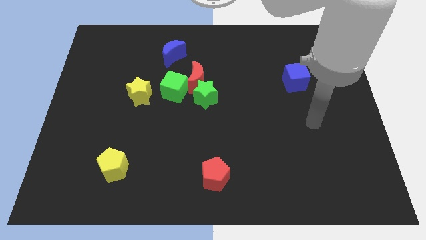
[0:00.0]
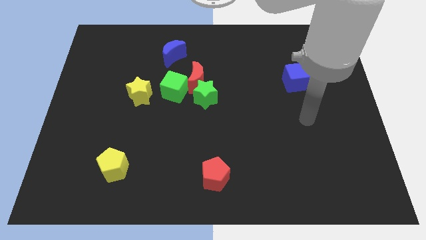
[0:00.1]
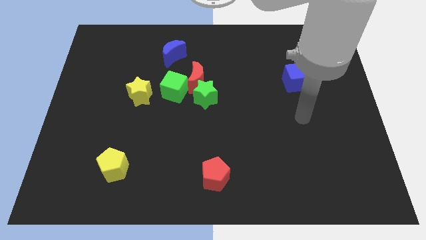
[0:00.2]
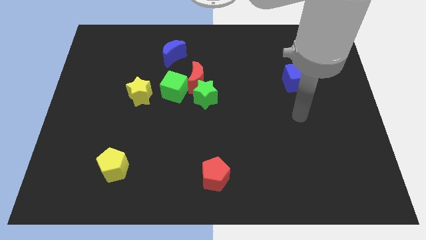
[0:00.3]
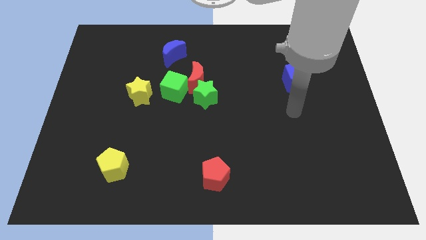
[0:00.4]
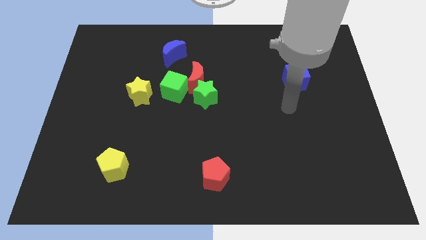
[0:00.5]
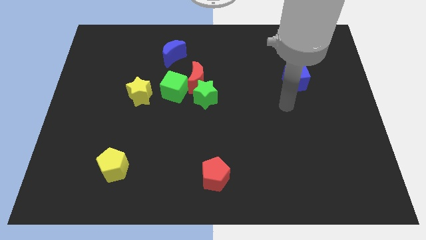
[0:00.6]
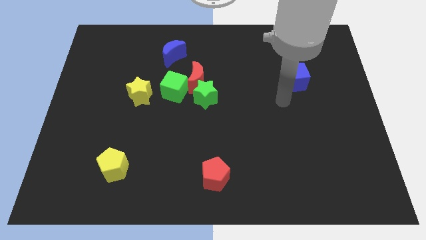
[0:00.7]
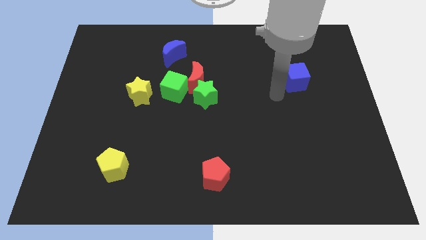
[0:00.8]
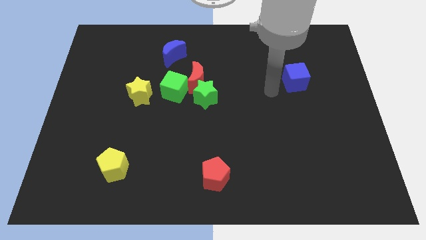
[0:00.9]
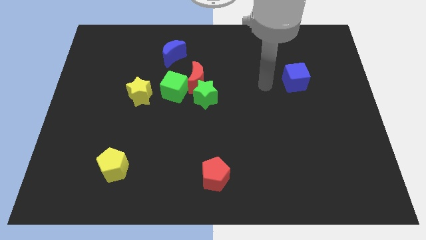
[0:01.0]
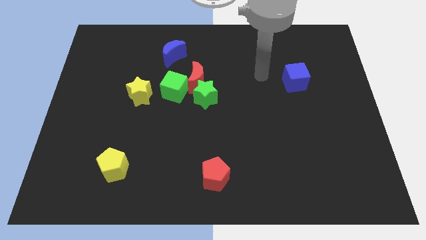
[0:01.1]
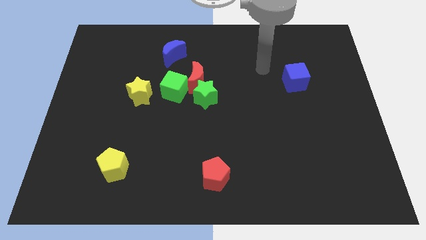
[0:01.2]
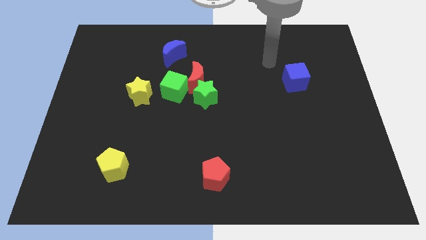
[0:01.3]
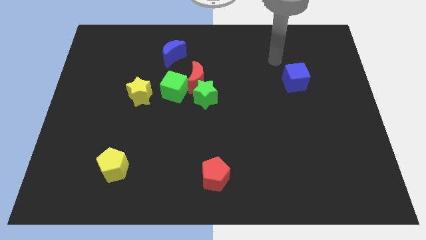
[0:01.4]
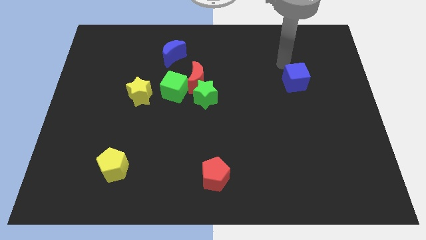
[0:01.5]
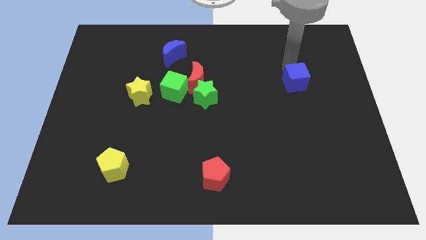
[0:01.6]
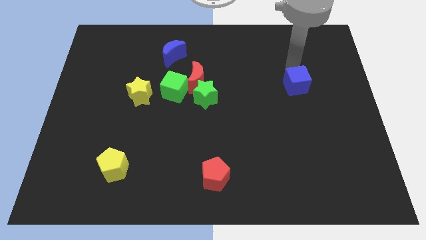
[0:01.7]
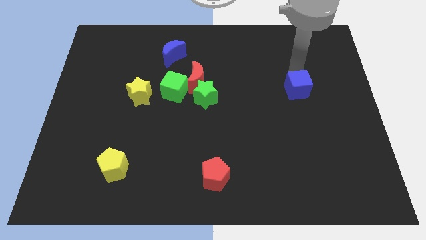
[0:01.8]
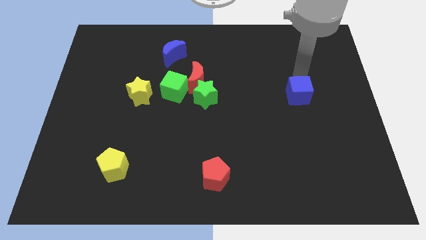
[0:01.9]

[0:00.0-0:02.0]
place the arm above the blue cube

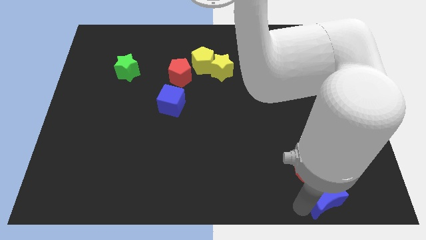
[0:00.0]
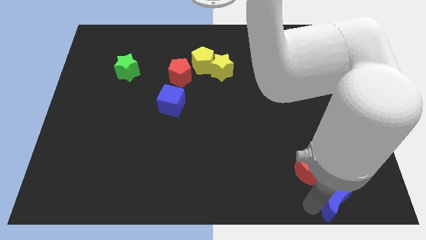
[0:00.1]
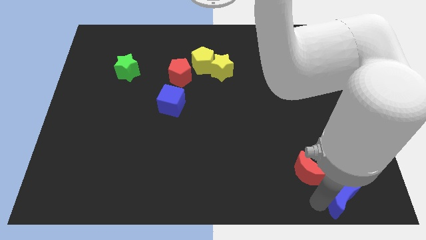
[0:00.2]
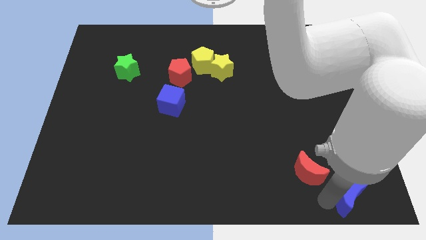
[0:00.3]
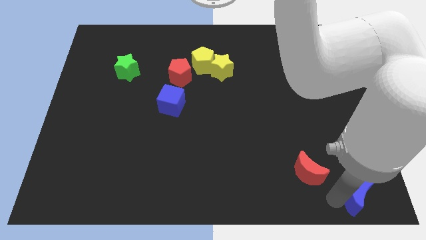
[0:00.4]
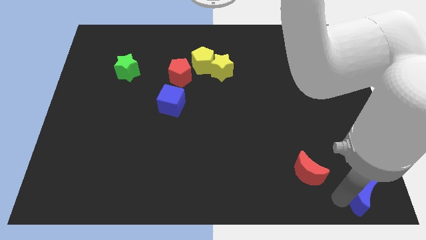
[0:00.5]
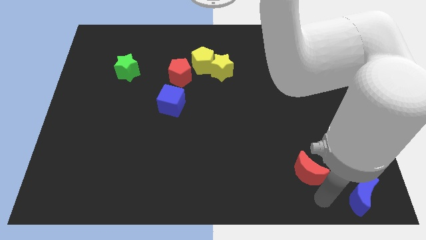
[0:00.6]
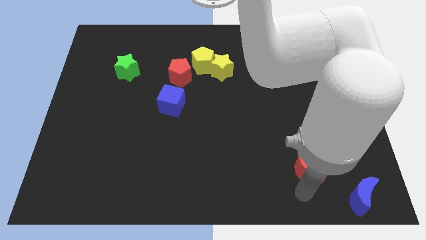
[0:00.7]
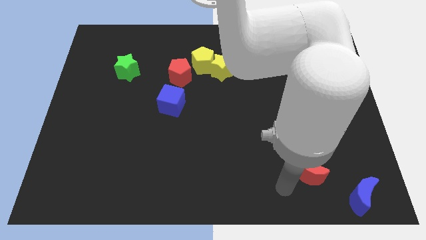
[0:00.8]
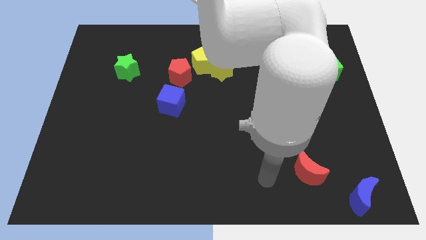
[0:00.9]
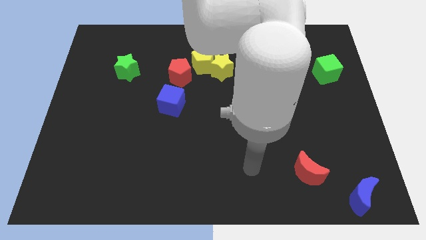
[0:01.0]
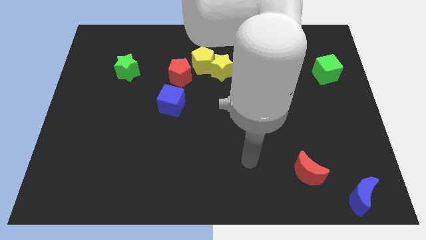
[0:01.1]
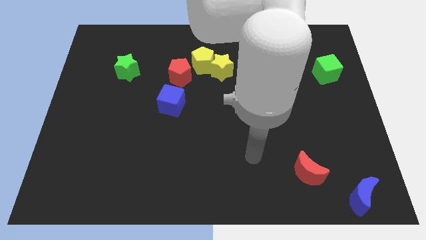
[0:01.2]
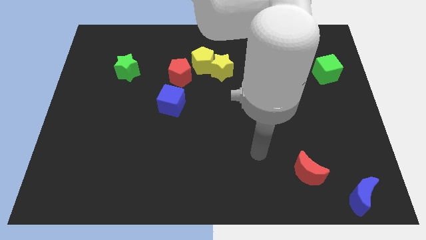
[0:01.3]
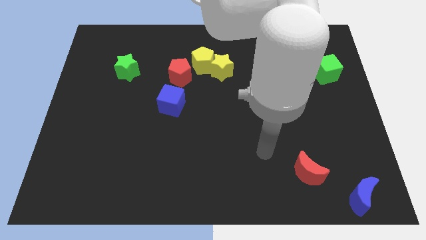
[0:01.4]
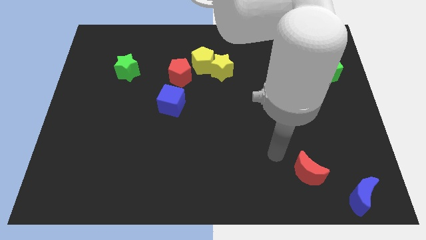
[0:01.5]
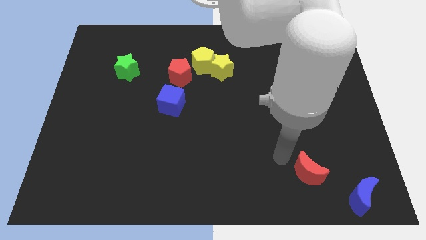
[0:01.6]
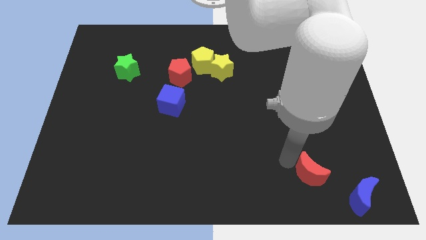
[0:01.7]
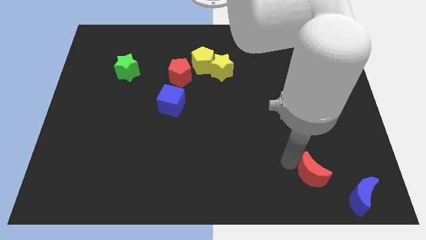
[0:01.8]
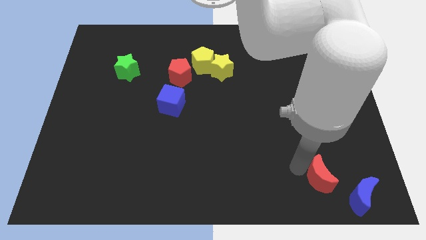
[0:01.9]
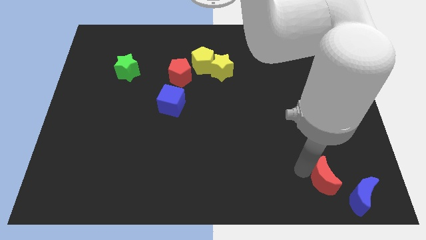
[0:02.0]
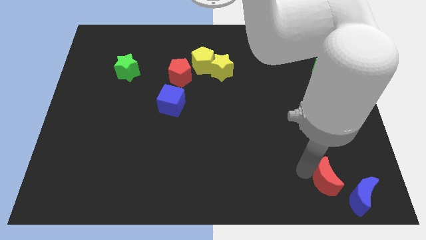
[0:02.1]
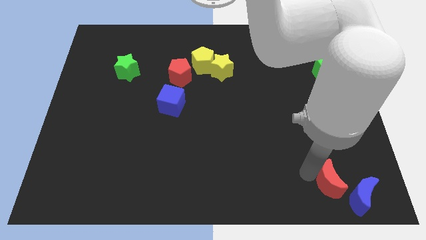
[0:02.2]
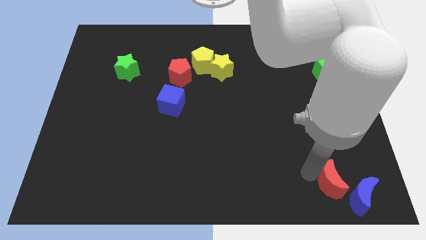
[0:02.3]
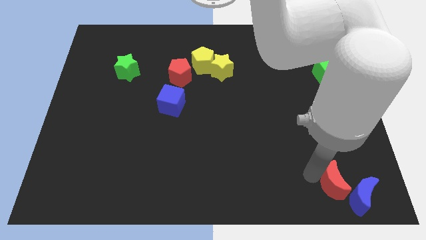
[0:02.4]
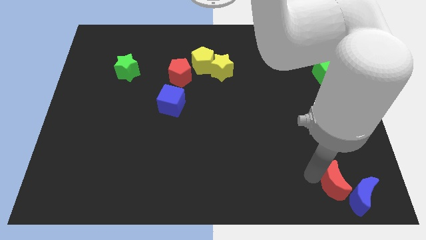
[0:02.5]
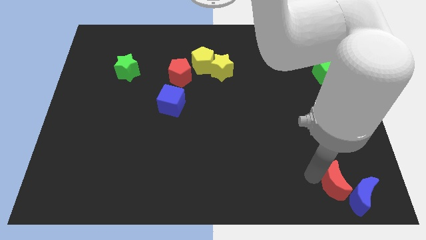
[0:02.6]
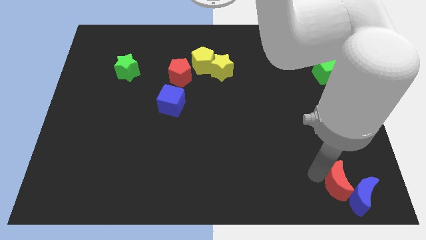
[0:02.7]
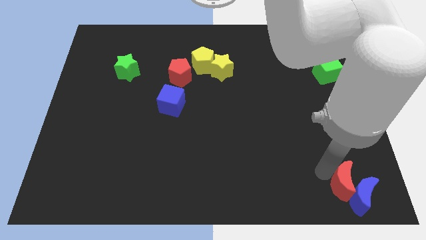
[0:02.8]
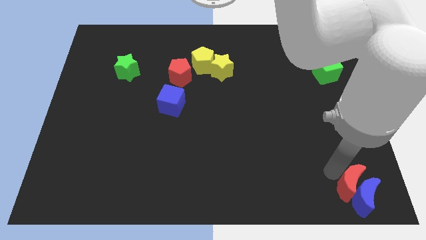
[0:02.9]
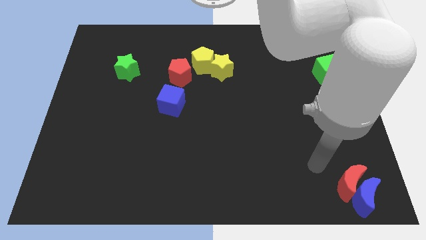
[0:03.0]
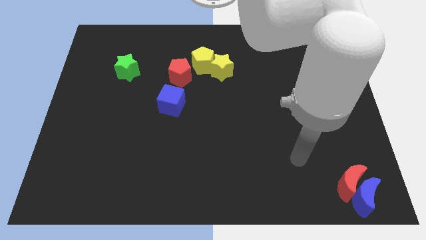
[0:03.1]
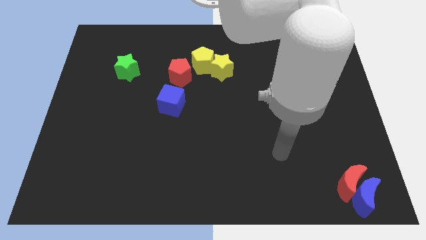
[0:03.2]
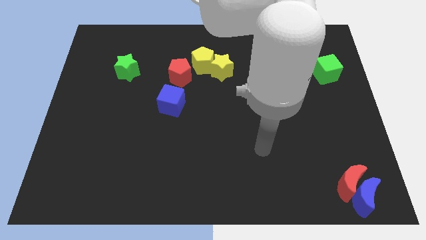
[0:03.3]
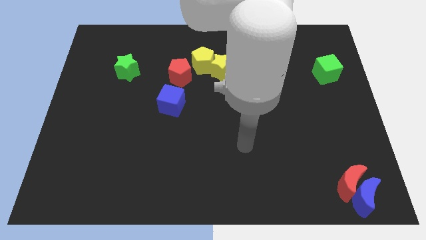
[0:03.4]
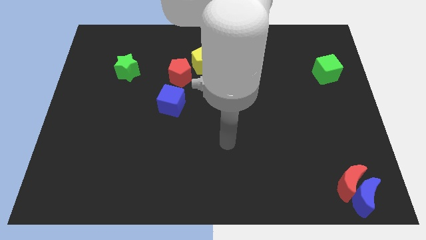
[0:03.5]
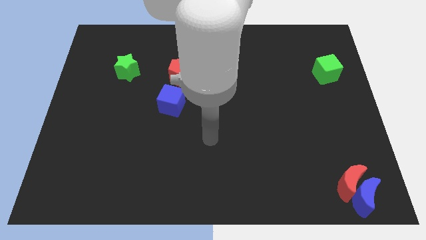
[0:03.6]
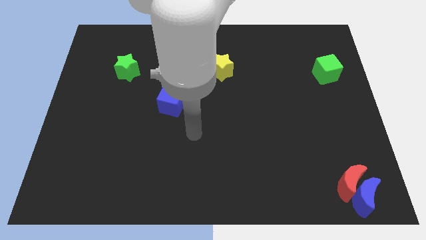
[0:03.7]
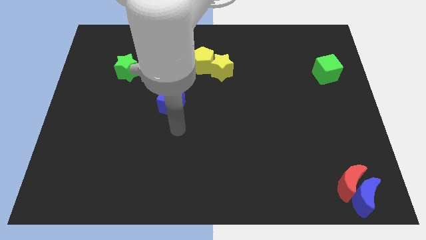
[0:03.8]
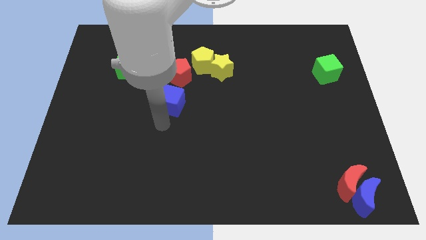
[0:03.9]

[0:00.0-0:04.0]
slide the blue semi circle and the red crescent to the right

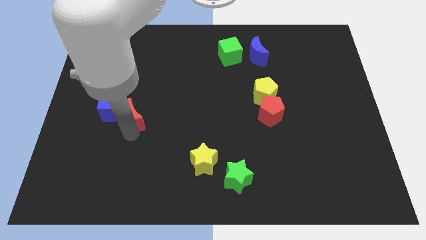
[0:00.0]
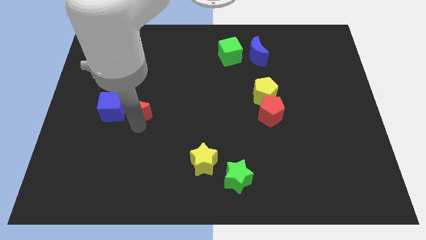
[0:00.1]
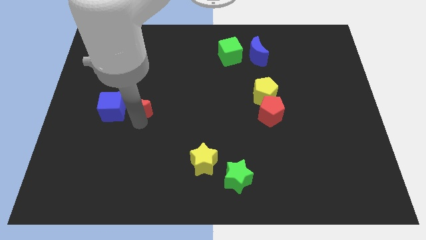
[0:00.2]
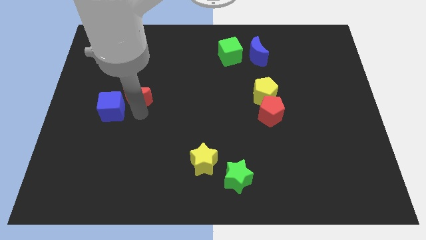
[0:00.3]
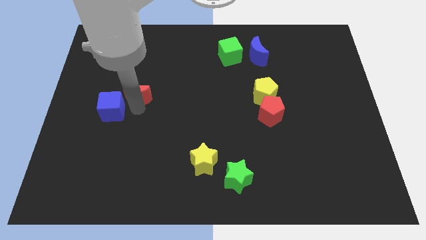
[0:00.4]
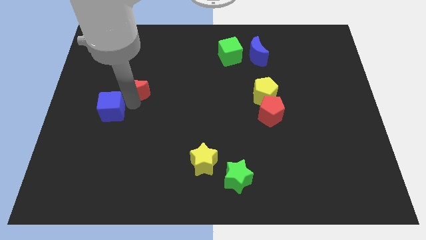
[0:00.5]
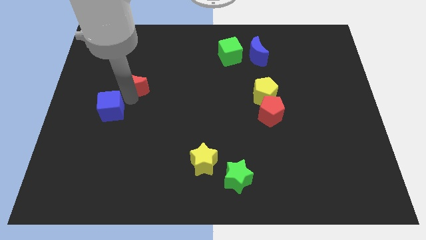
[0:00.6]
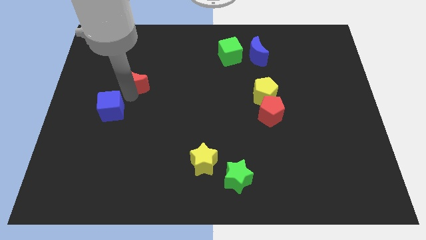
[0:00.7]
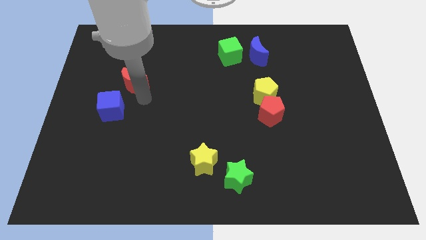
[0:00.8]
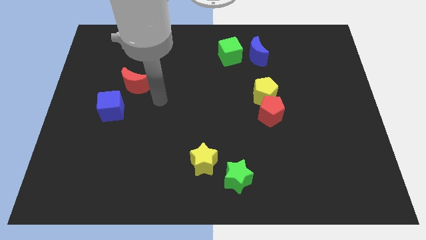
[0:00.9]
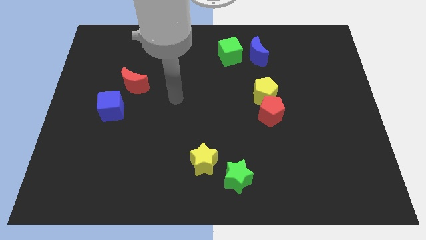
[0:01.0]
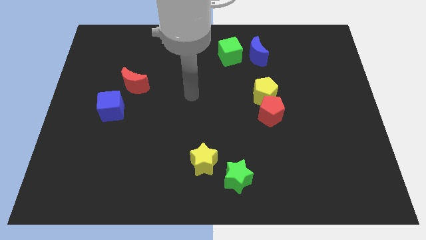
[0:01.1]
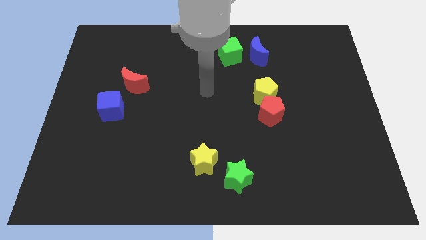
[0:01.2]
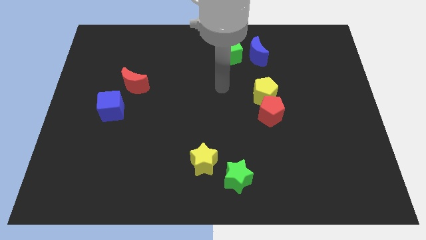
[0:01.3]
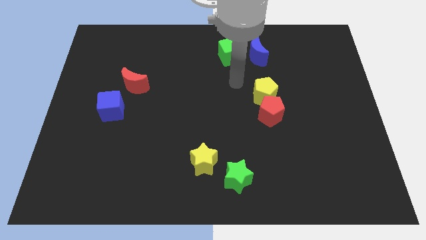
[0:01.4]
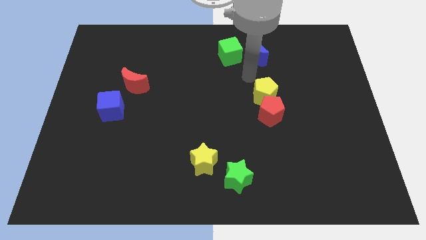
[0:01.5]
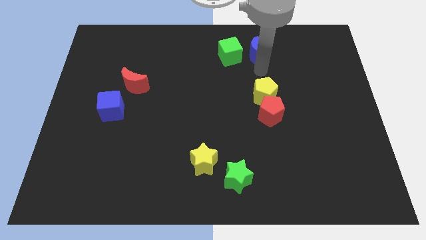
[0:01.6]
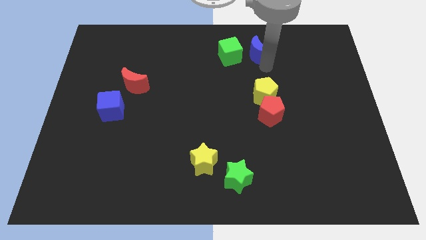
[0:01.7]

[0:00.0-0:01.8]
separate the red moon from the blue cube

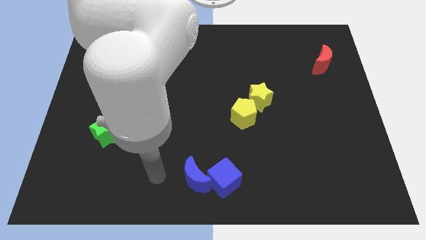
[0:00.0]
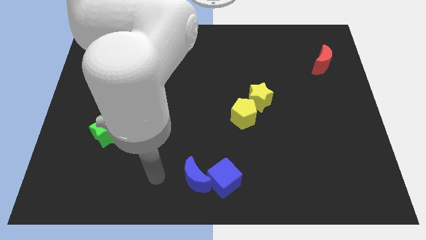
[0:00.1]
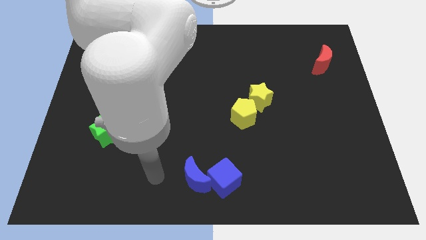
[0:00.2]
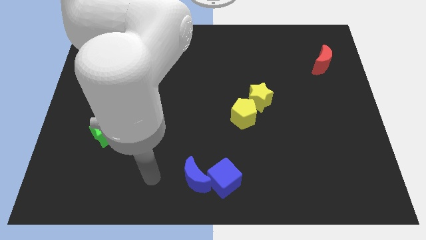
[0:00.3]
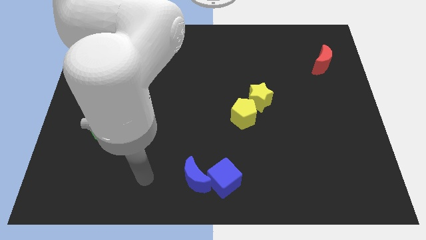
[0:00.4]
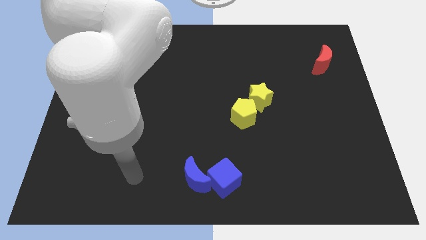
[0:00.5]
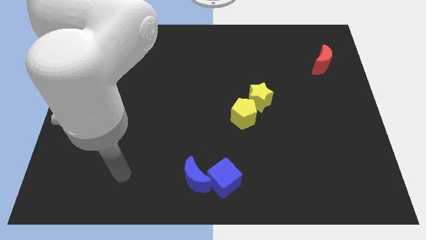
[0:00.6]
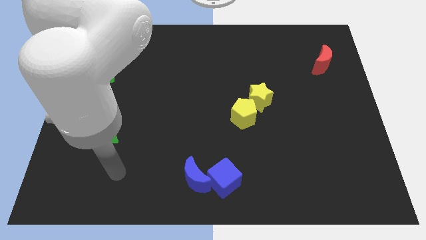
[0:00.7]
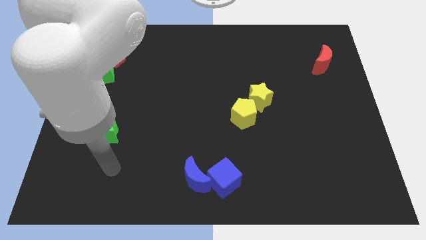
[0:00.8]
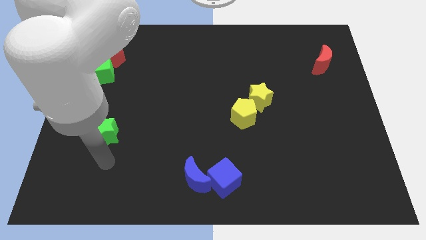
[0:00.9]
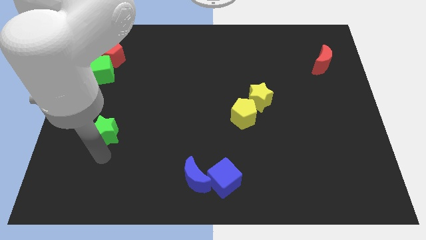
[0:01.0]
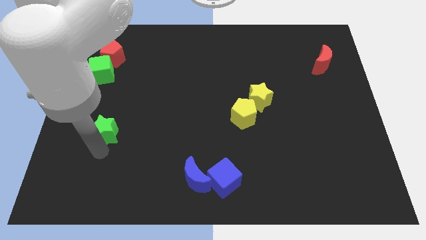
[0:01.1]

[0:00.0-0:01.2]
tap the green star
